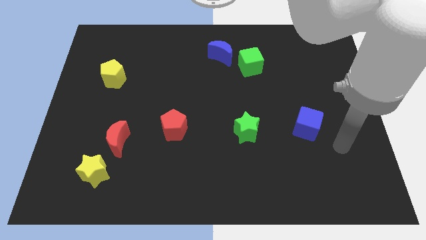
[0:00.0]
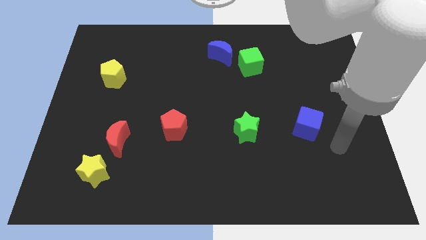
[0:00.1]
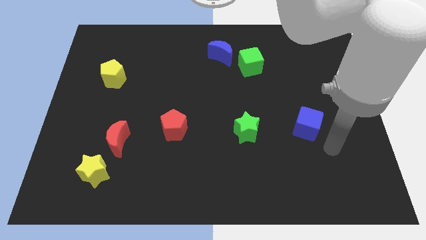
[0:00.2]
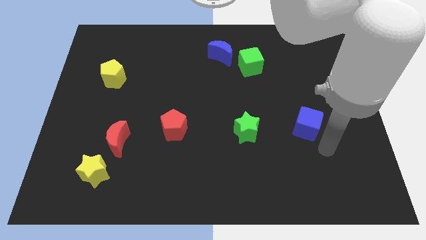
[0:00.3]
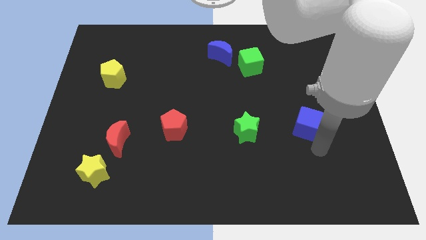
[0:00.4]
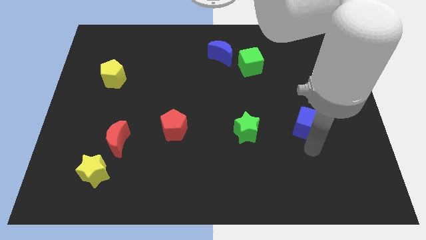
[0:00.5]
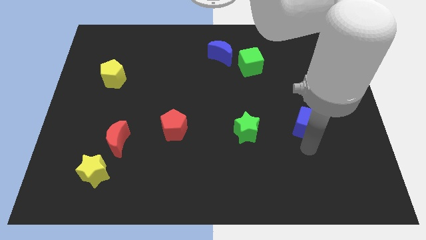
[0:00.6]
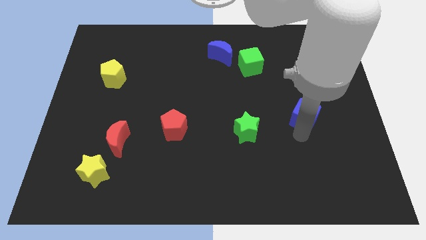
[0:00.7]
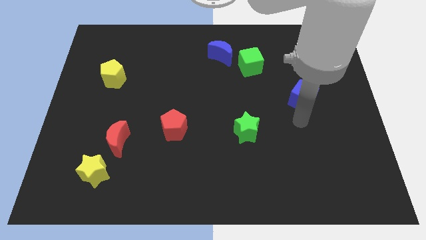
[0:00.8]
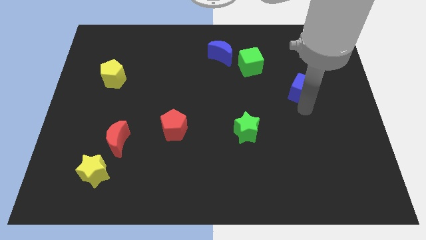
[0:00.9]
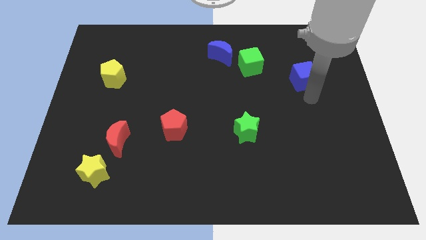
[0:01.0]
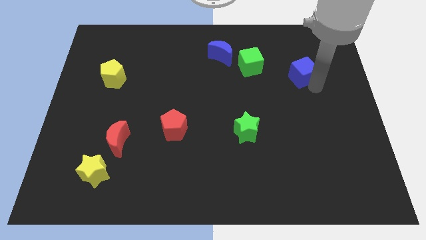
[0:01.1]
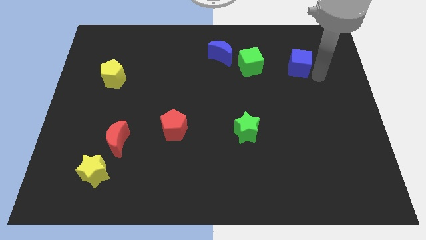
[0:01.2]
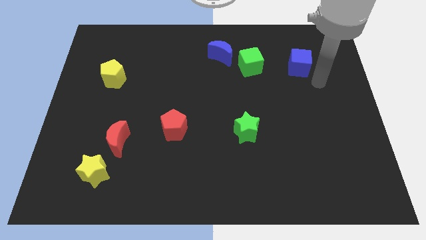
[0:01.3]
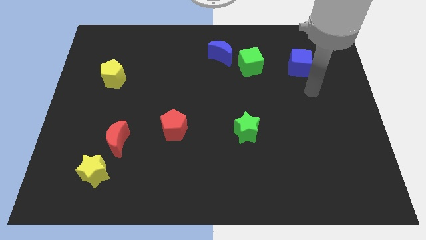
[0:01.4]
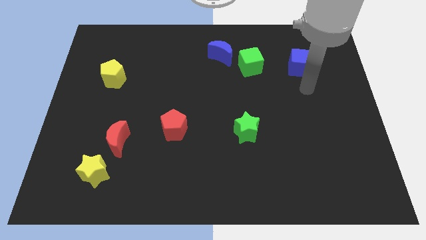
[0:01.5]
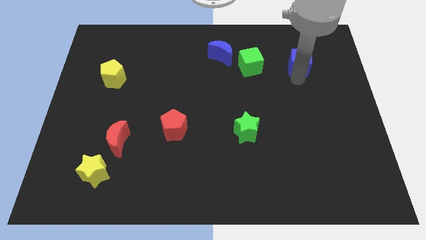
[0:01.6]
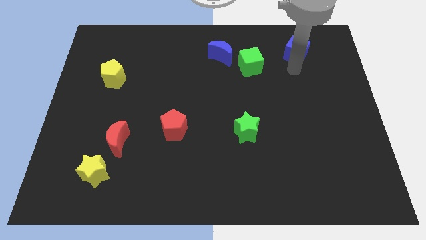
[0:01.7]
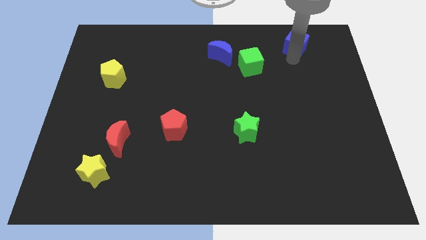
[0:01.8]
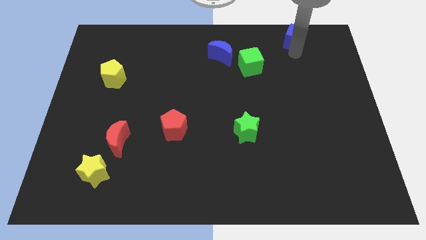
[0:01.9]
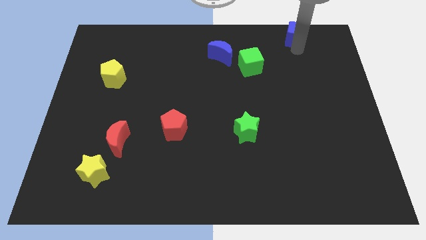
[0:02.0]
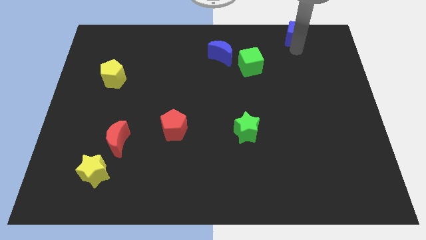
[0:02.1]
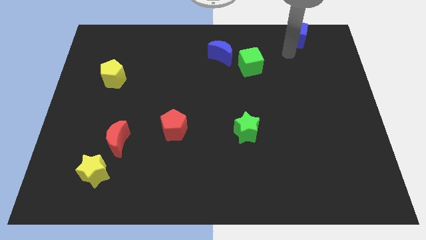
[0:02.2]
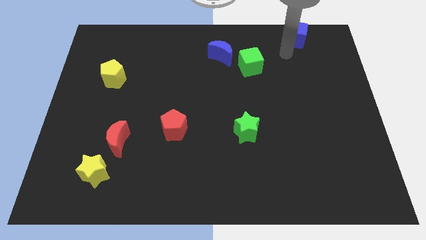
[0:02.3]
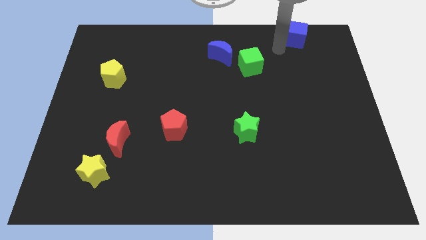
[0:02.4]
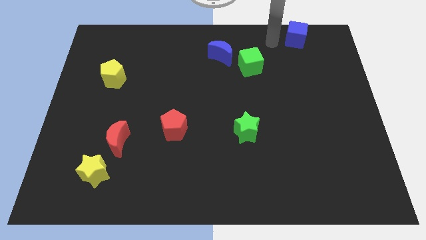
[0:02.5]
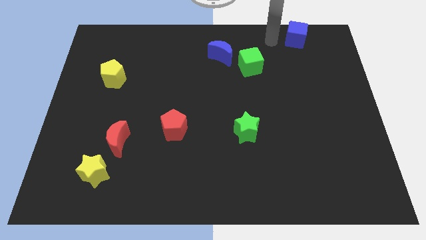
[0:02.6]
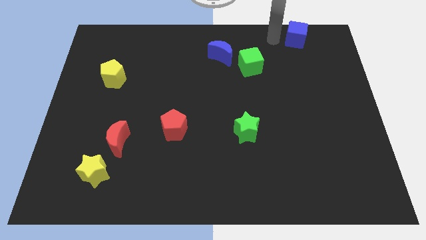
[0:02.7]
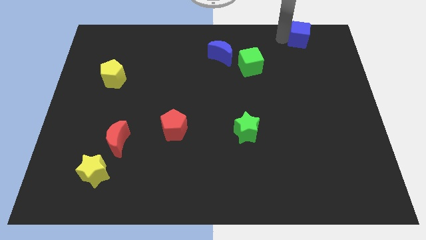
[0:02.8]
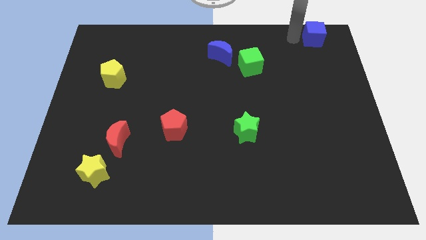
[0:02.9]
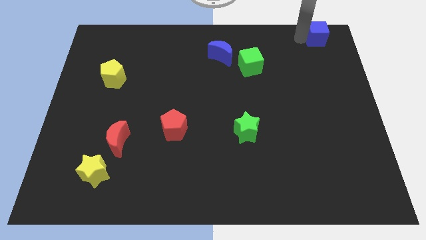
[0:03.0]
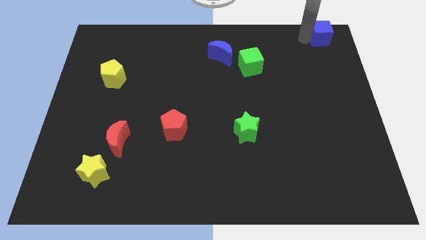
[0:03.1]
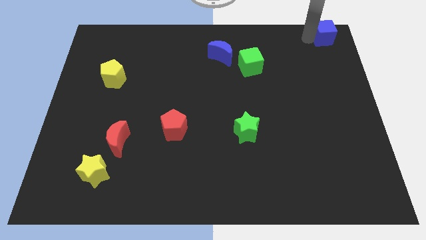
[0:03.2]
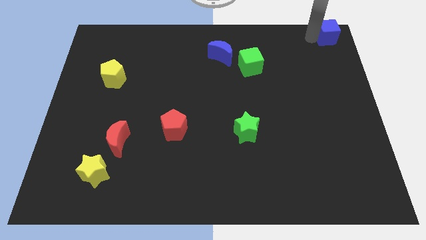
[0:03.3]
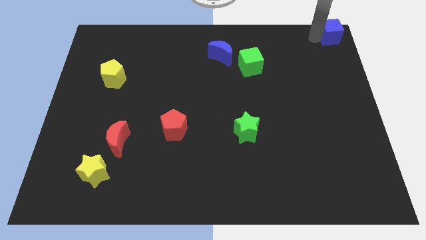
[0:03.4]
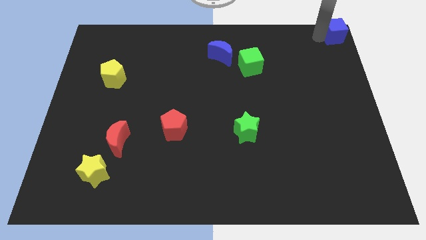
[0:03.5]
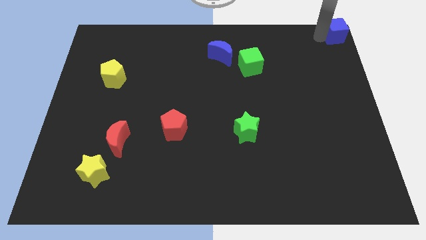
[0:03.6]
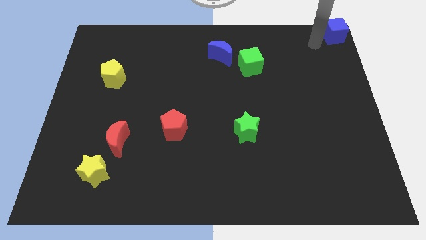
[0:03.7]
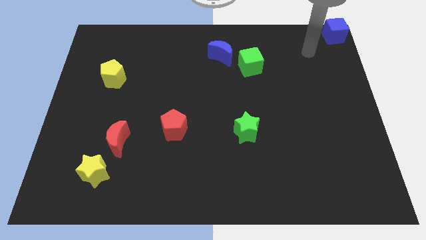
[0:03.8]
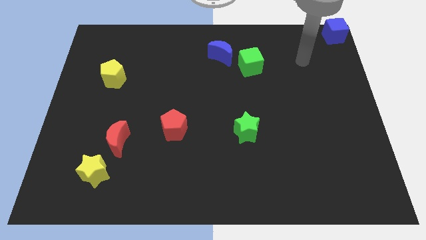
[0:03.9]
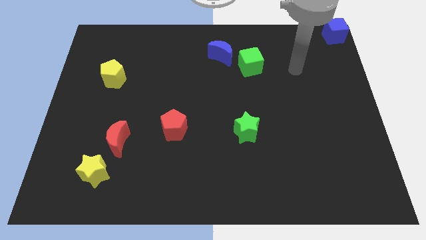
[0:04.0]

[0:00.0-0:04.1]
move the blue cube to the top right corner of the board

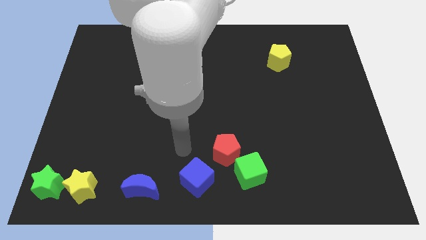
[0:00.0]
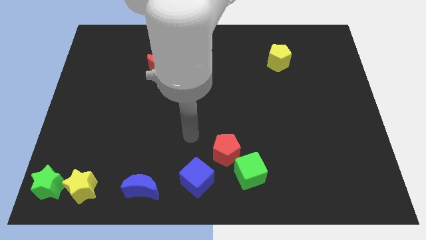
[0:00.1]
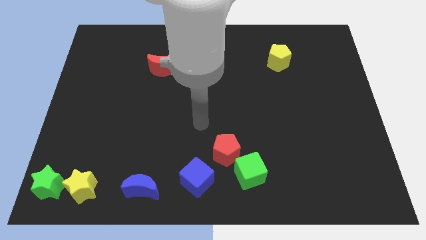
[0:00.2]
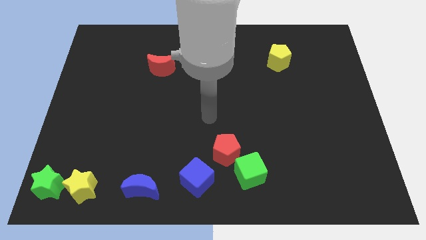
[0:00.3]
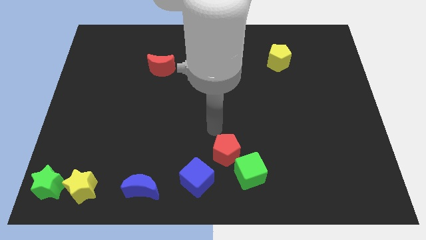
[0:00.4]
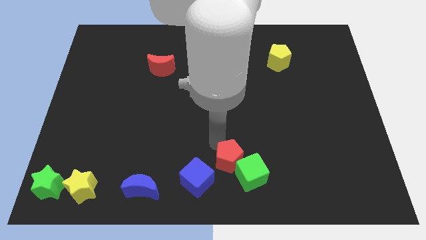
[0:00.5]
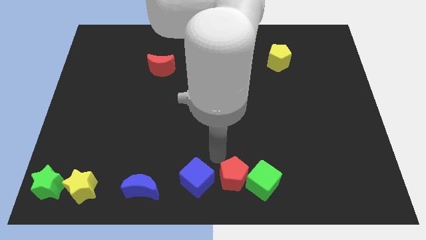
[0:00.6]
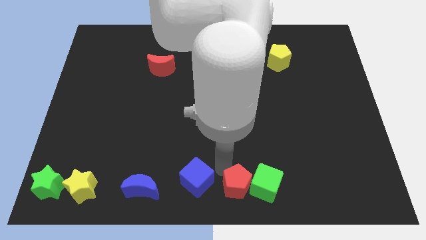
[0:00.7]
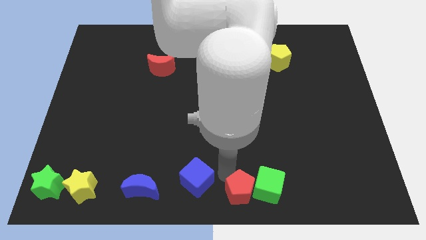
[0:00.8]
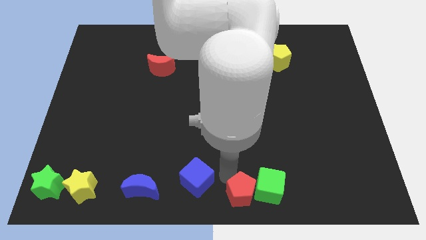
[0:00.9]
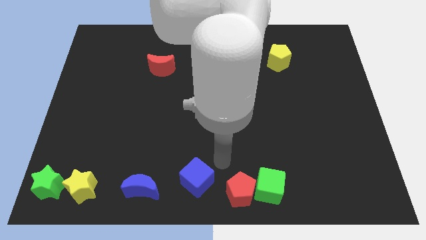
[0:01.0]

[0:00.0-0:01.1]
push the red pentagon into the green cube

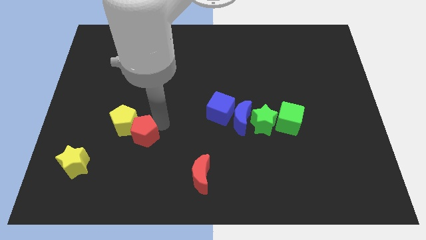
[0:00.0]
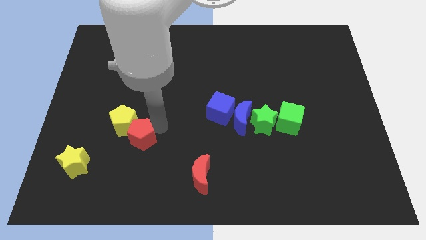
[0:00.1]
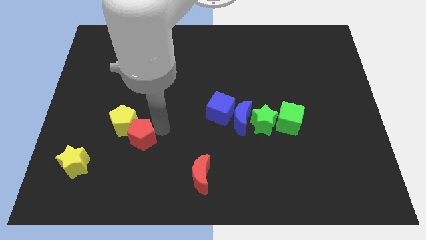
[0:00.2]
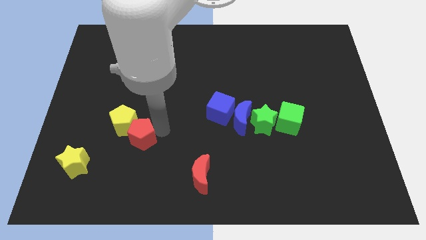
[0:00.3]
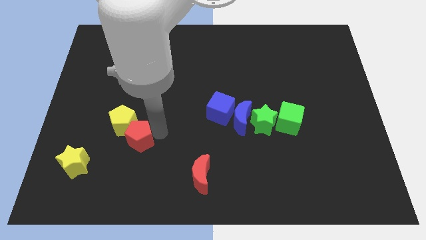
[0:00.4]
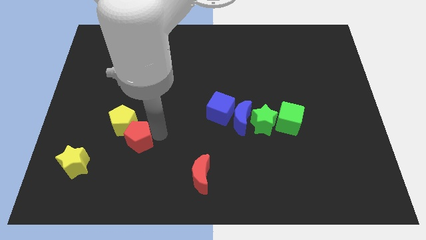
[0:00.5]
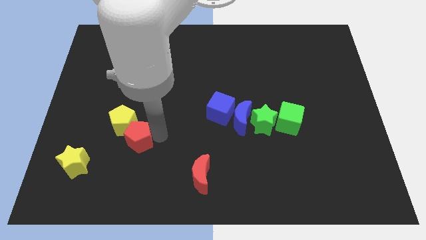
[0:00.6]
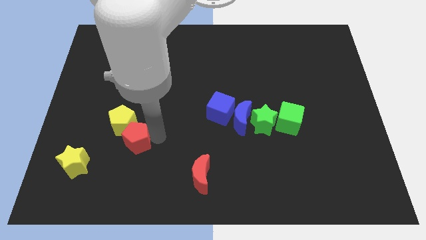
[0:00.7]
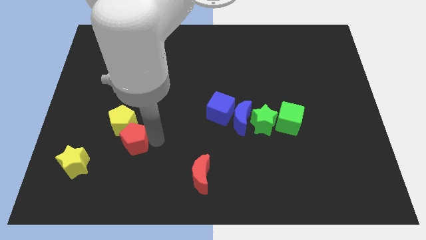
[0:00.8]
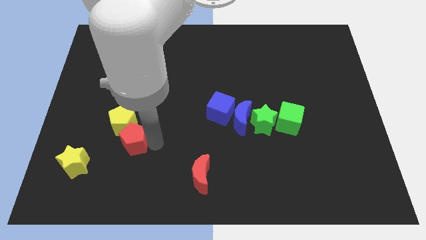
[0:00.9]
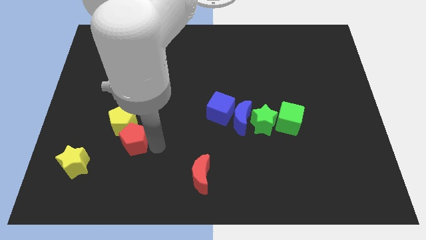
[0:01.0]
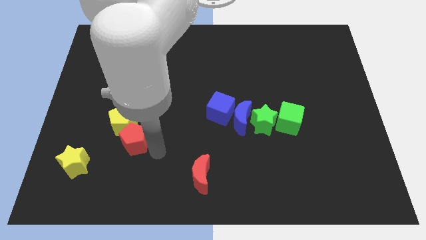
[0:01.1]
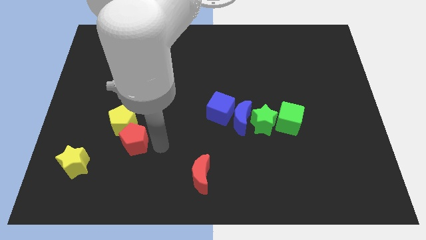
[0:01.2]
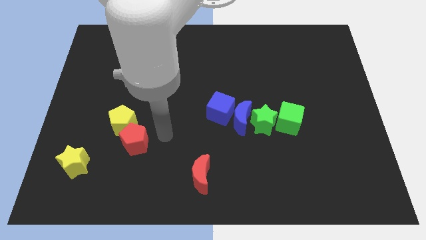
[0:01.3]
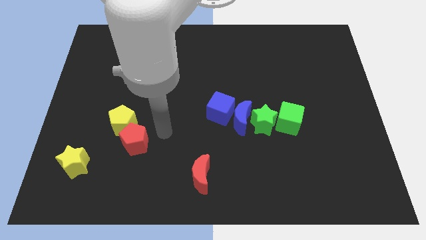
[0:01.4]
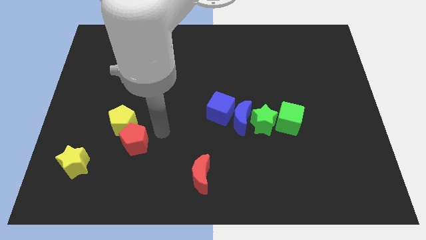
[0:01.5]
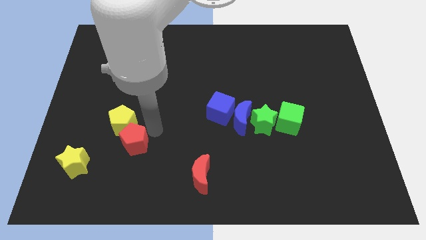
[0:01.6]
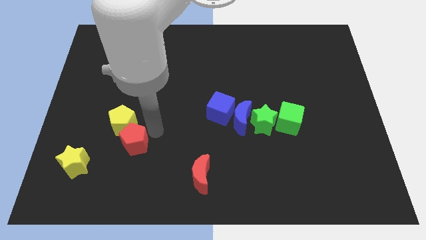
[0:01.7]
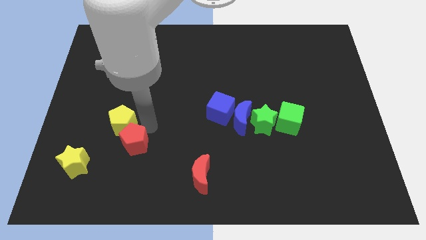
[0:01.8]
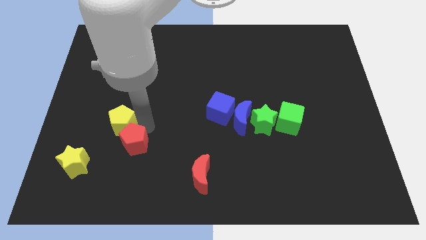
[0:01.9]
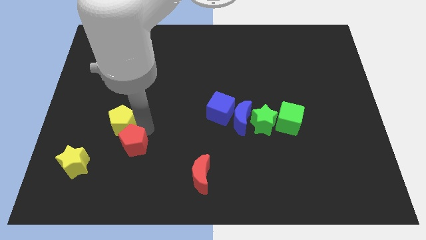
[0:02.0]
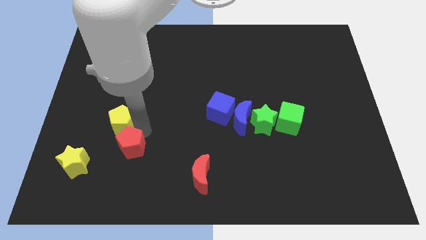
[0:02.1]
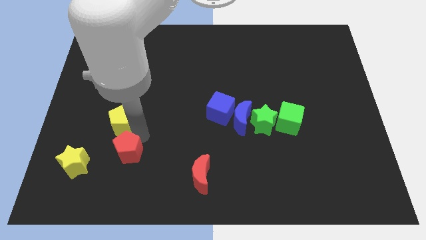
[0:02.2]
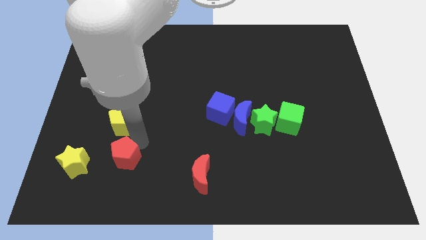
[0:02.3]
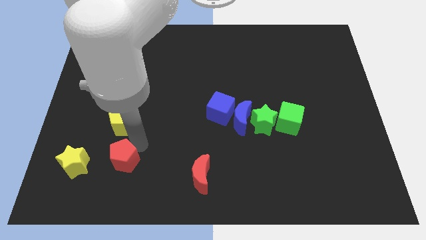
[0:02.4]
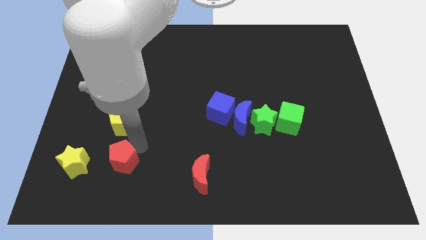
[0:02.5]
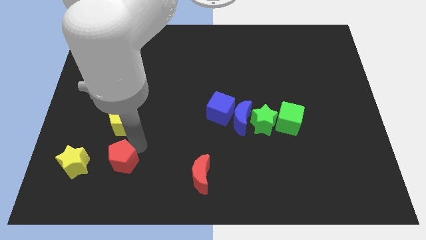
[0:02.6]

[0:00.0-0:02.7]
separate the red pentagon from the yellow pentagon

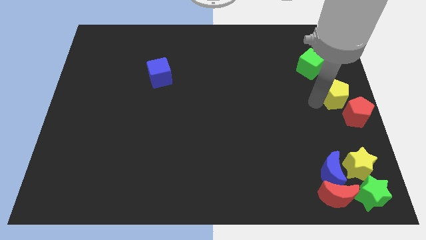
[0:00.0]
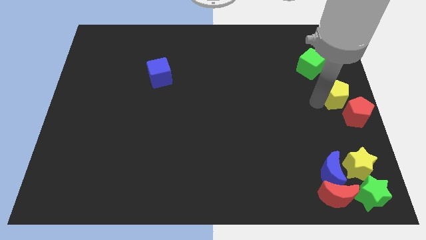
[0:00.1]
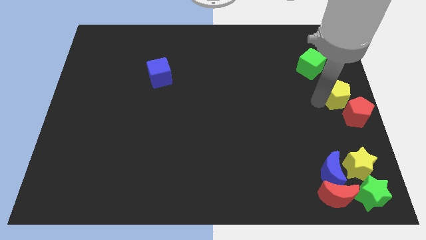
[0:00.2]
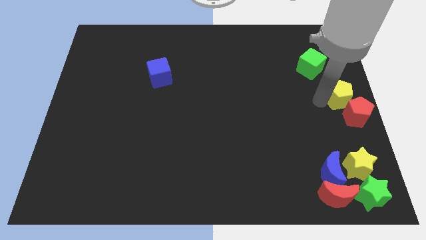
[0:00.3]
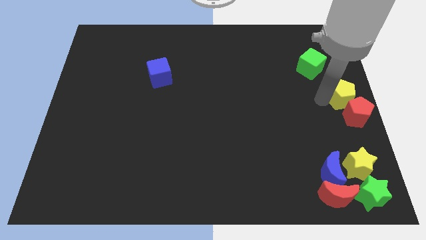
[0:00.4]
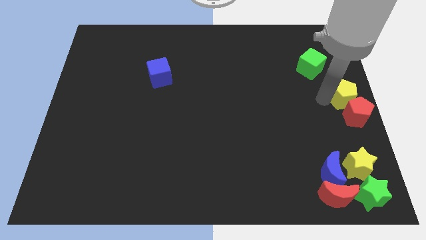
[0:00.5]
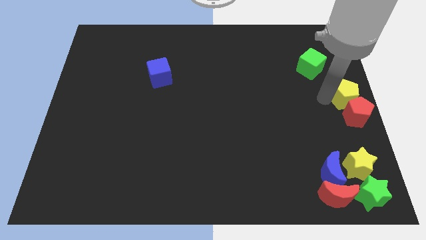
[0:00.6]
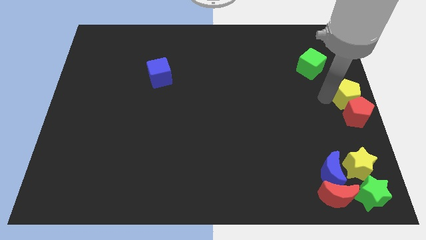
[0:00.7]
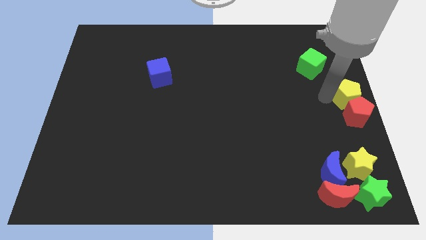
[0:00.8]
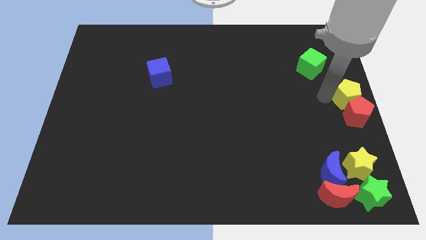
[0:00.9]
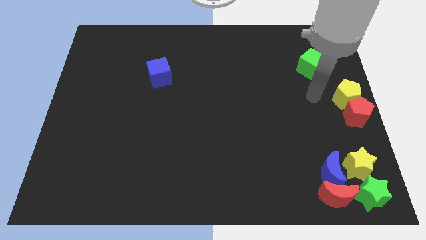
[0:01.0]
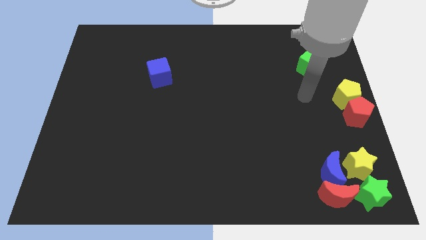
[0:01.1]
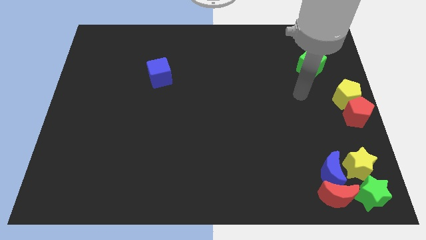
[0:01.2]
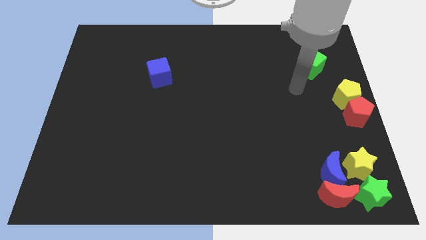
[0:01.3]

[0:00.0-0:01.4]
move yellow pentagon to the top of the red pentagon
